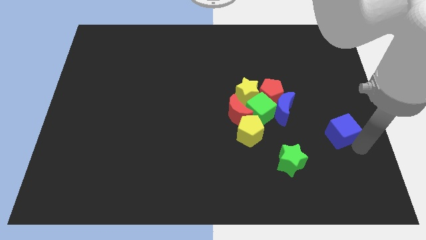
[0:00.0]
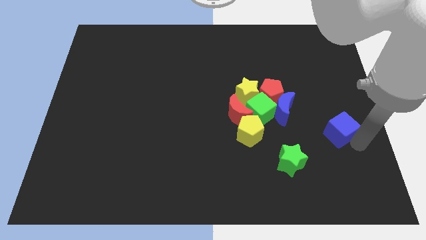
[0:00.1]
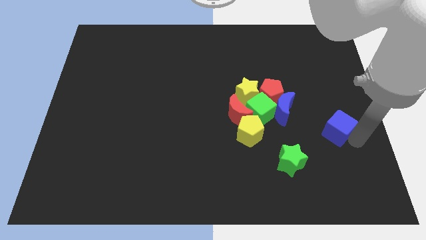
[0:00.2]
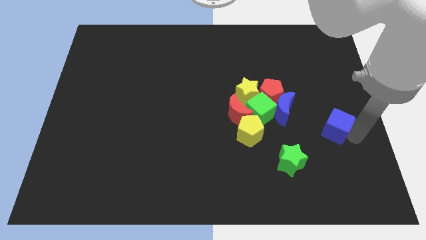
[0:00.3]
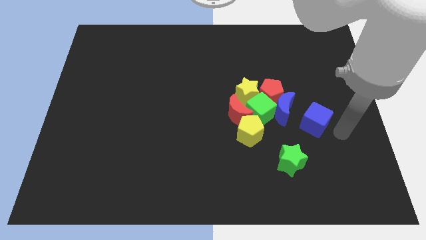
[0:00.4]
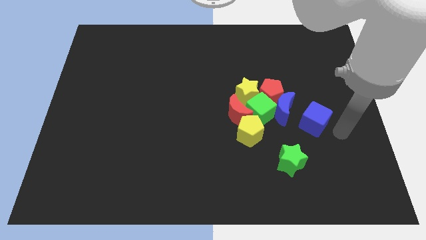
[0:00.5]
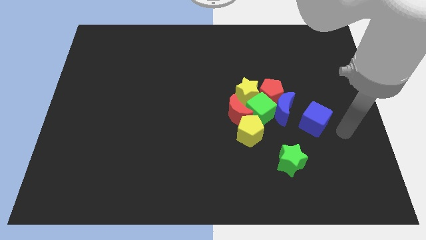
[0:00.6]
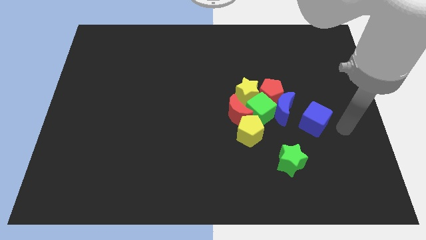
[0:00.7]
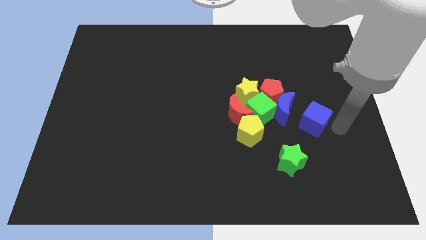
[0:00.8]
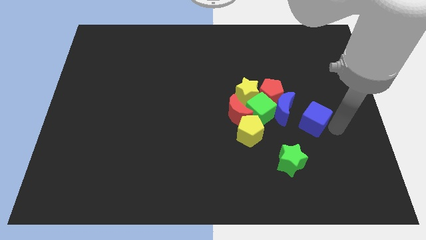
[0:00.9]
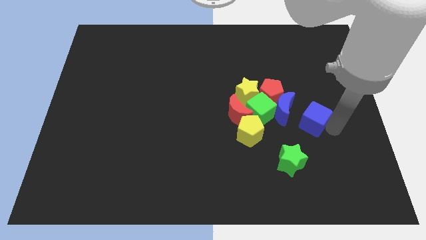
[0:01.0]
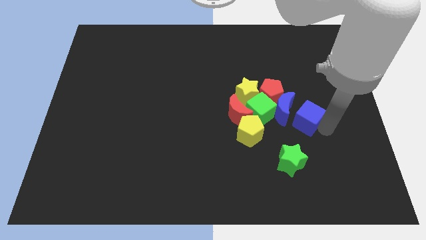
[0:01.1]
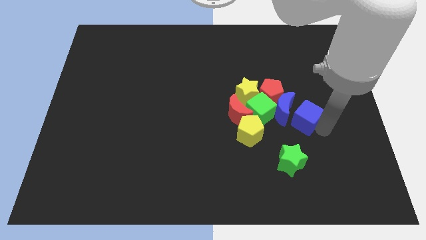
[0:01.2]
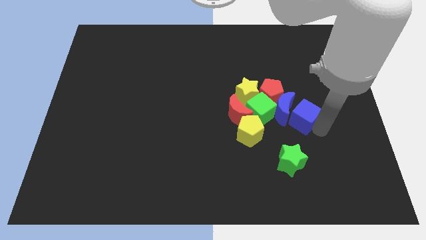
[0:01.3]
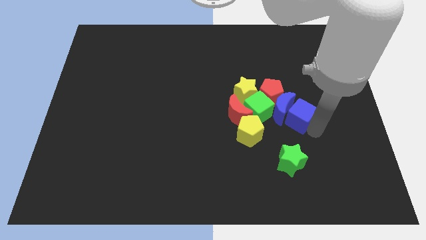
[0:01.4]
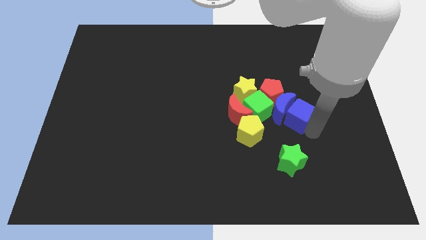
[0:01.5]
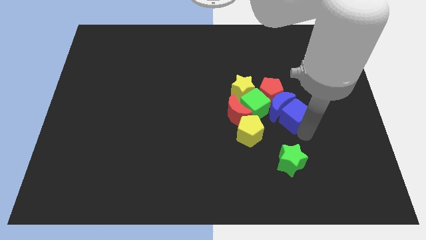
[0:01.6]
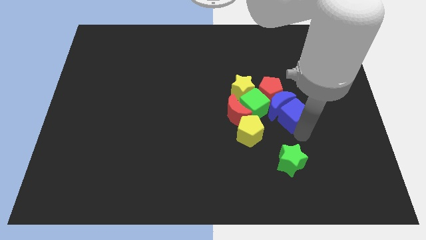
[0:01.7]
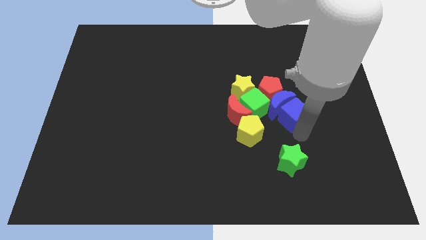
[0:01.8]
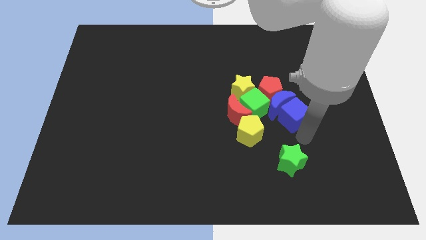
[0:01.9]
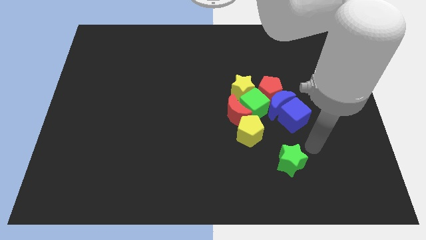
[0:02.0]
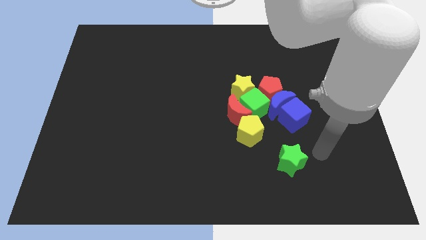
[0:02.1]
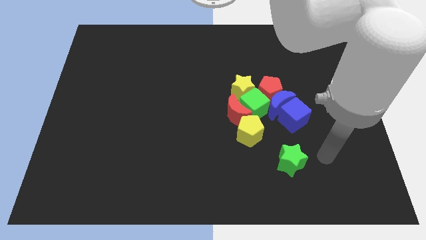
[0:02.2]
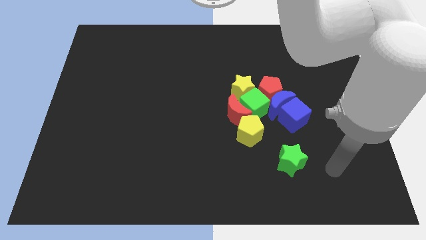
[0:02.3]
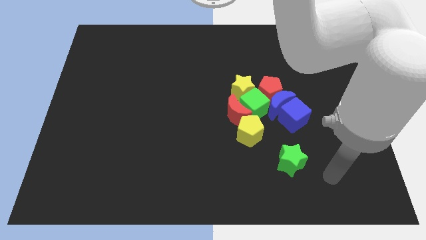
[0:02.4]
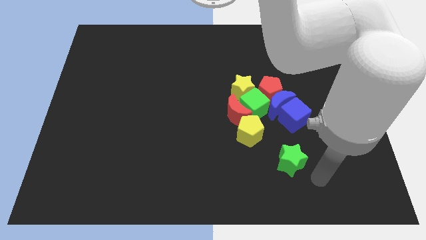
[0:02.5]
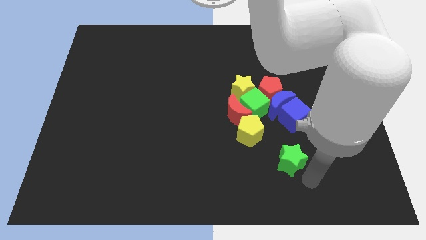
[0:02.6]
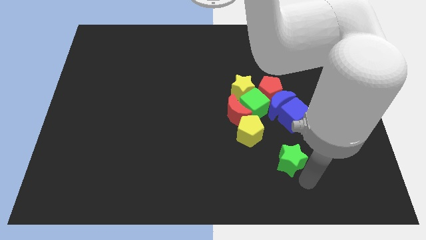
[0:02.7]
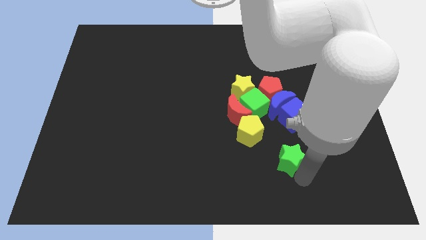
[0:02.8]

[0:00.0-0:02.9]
move the blue cube towards blue crescent

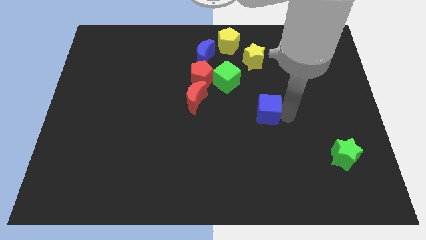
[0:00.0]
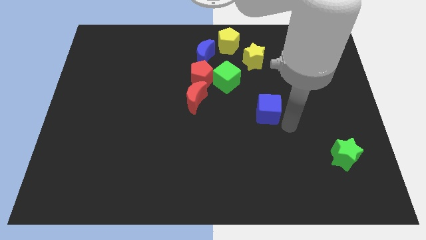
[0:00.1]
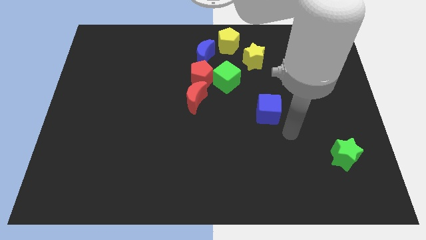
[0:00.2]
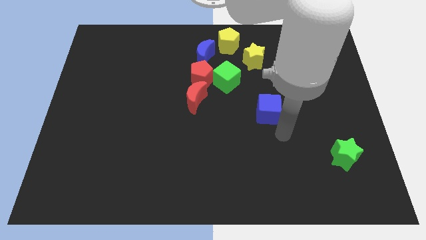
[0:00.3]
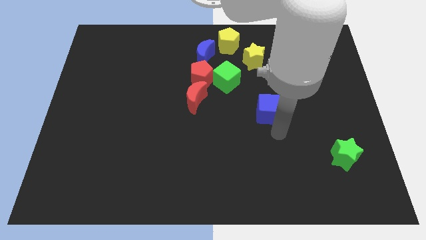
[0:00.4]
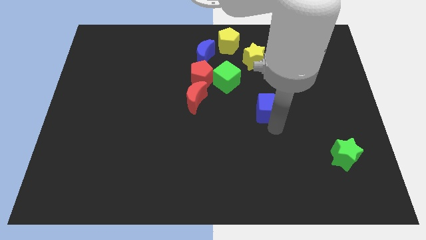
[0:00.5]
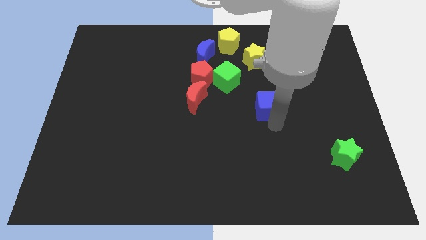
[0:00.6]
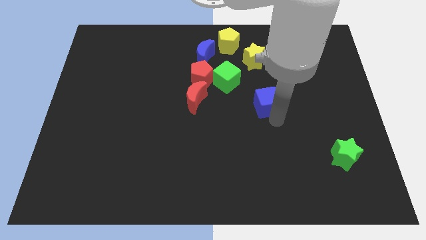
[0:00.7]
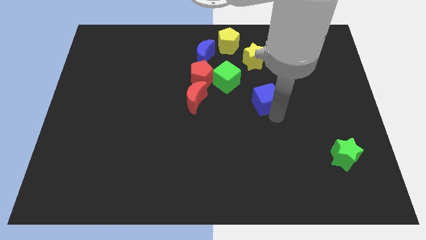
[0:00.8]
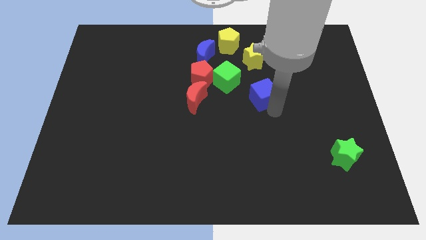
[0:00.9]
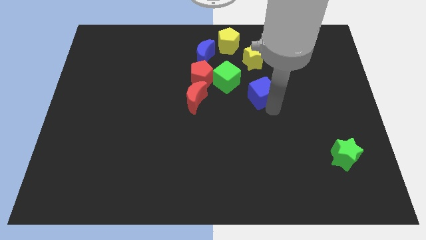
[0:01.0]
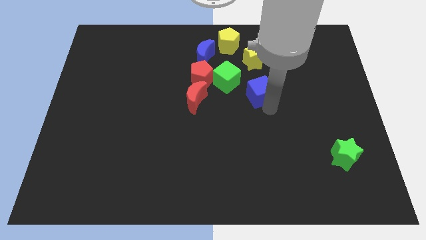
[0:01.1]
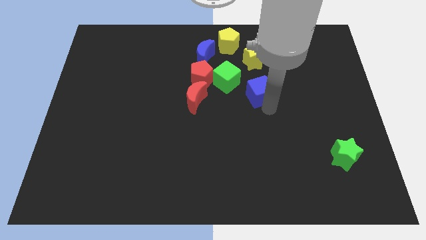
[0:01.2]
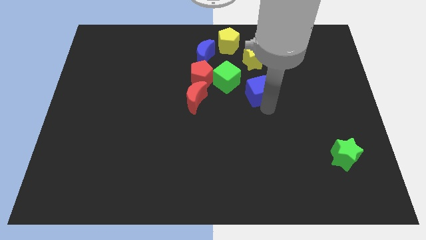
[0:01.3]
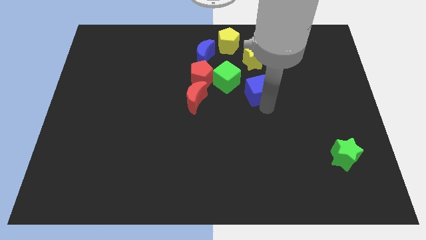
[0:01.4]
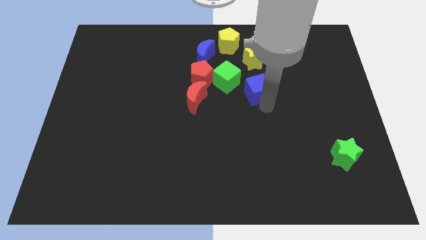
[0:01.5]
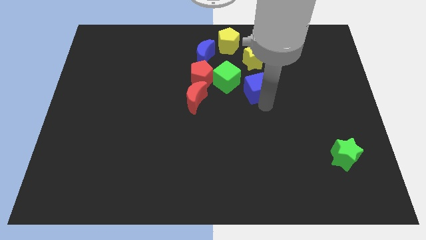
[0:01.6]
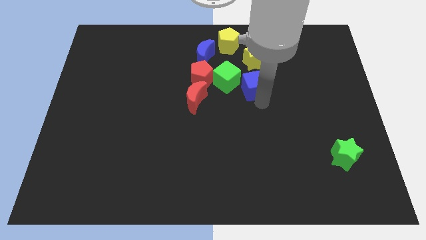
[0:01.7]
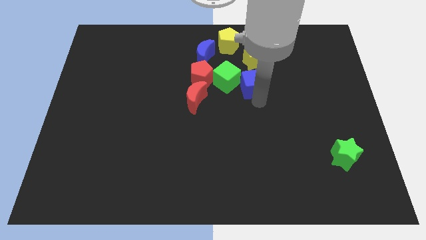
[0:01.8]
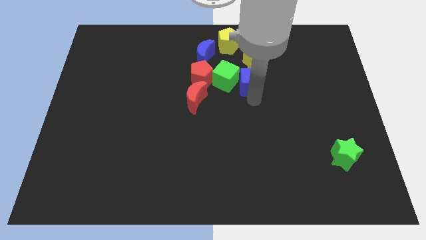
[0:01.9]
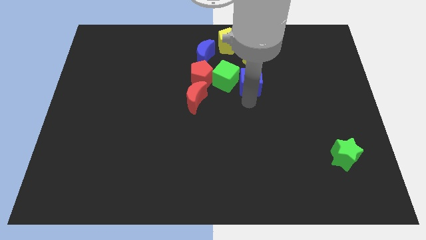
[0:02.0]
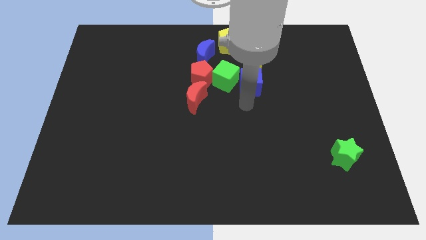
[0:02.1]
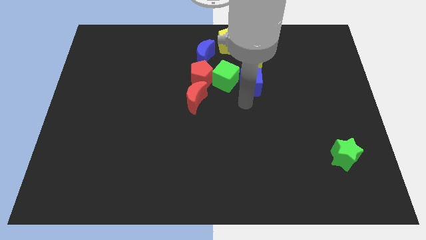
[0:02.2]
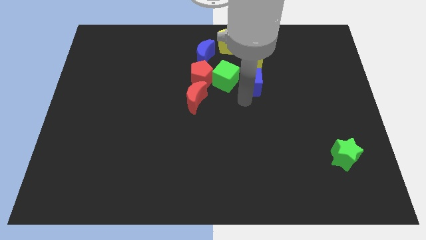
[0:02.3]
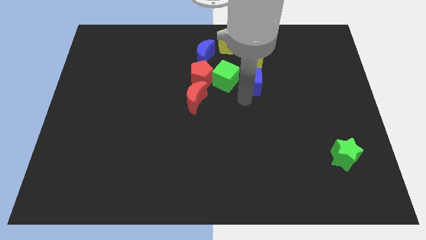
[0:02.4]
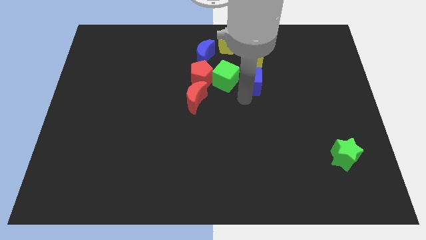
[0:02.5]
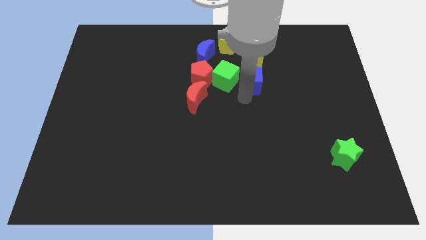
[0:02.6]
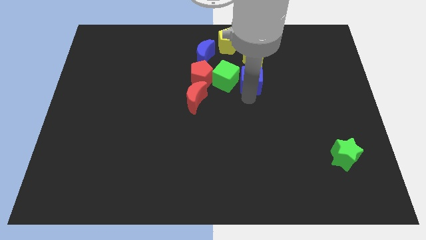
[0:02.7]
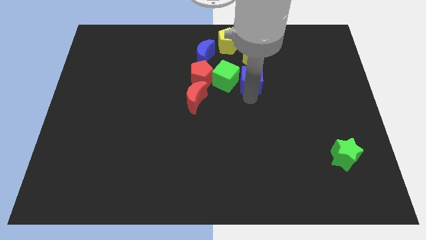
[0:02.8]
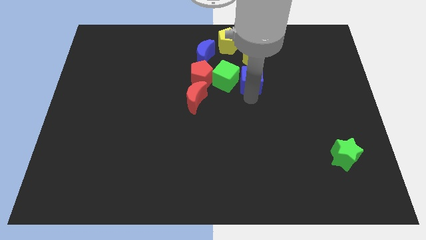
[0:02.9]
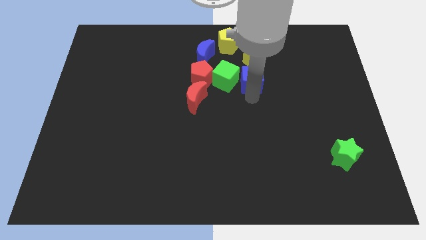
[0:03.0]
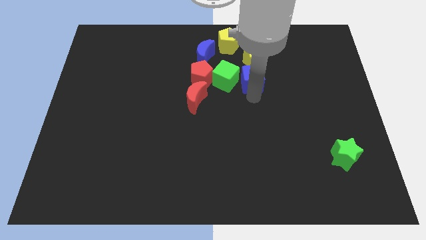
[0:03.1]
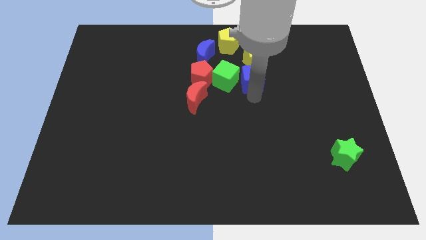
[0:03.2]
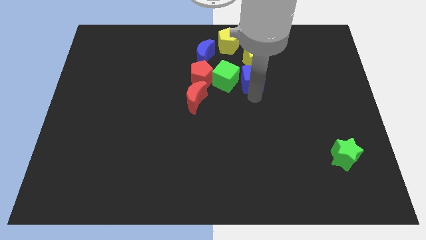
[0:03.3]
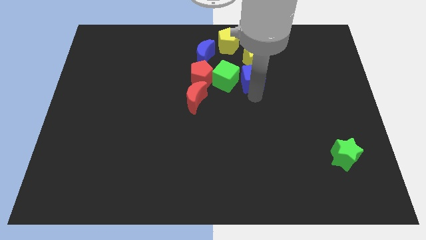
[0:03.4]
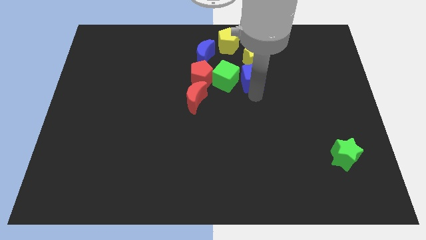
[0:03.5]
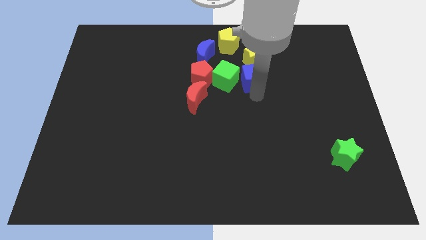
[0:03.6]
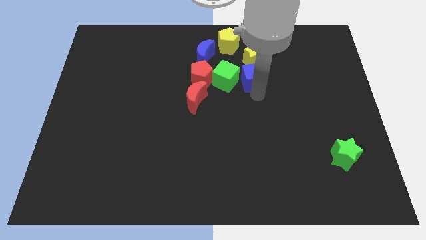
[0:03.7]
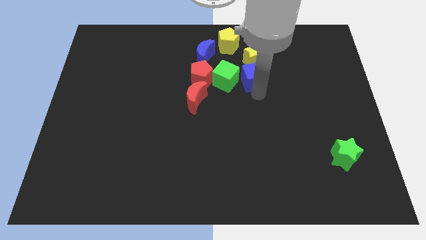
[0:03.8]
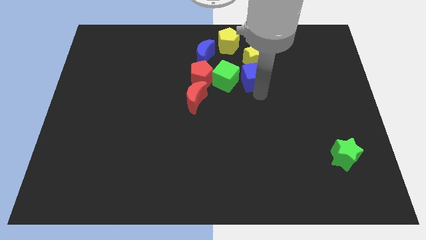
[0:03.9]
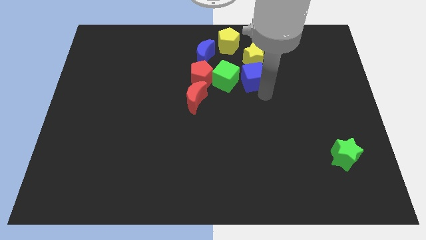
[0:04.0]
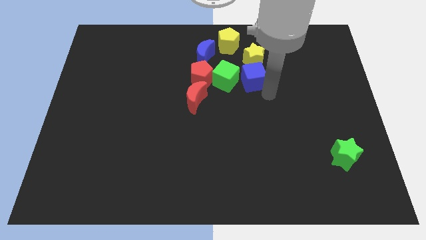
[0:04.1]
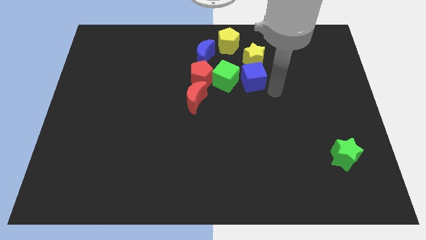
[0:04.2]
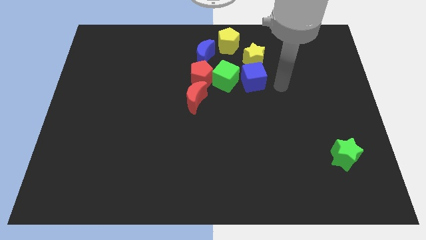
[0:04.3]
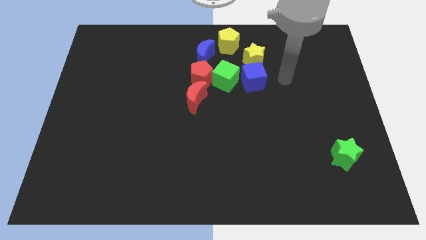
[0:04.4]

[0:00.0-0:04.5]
place the blue square down to the yellow star

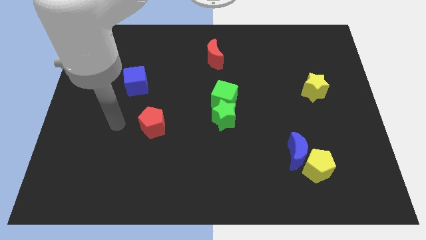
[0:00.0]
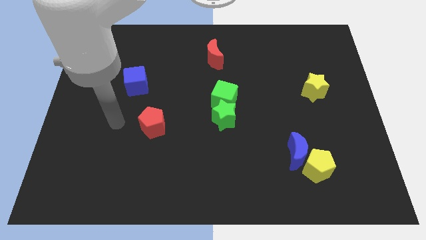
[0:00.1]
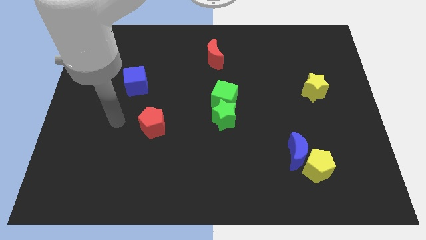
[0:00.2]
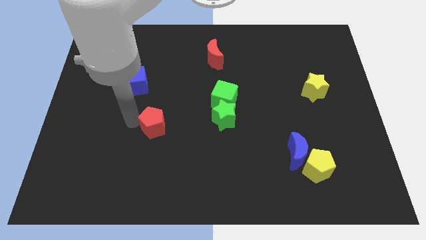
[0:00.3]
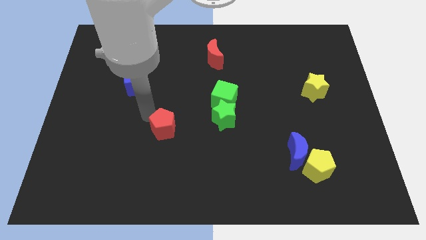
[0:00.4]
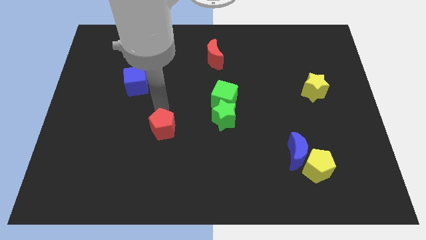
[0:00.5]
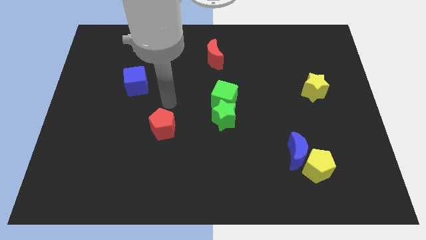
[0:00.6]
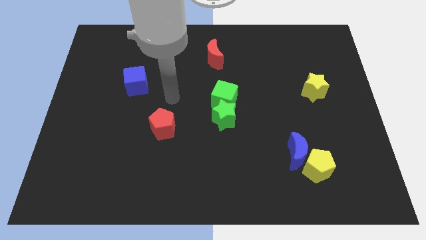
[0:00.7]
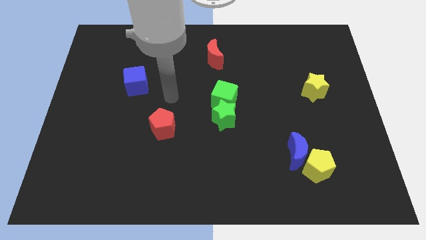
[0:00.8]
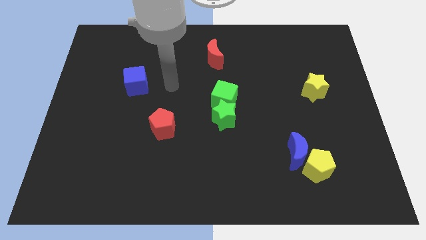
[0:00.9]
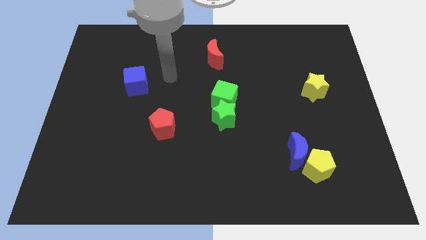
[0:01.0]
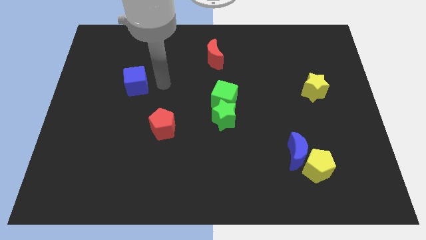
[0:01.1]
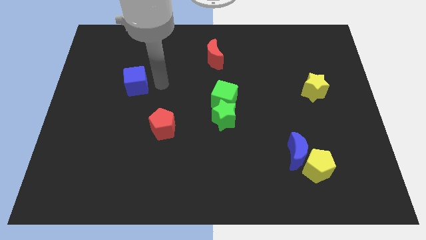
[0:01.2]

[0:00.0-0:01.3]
slide the red pentagon slightly to the right

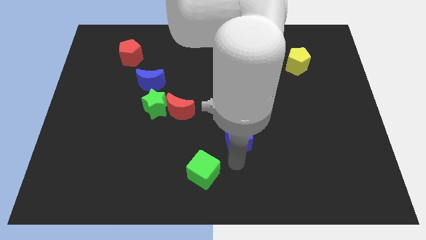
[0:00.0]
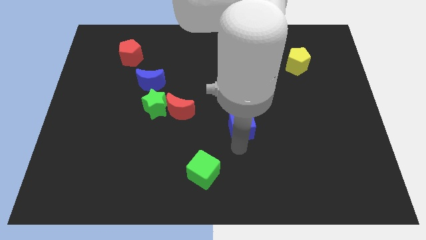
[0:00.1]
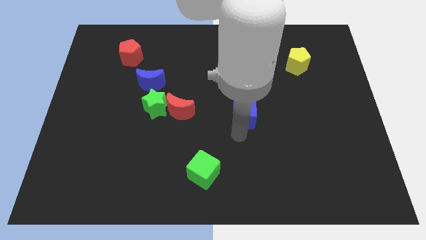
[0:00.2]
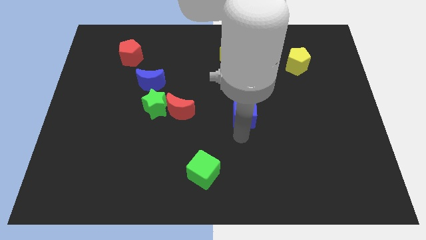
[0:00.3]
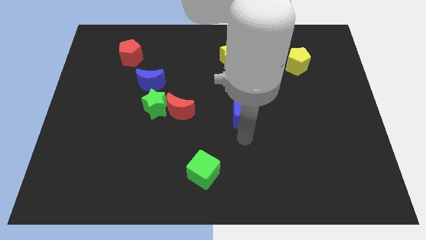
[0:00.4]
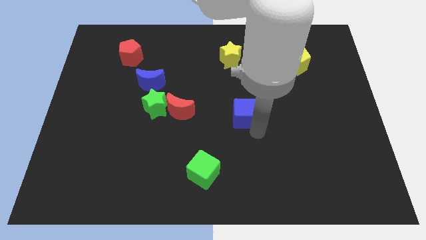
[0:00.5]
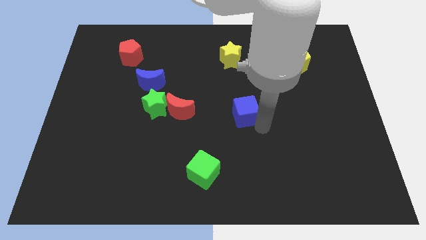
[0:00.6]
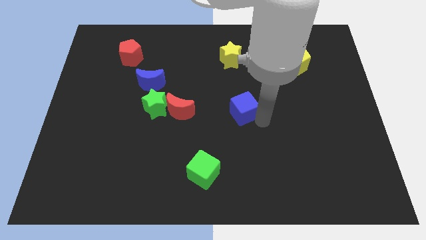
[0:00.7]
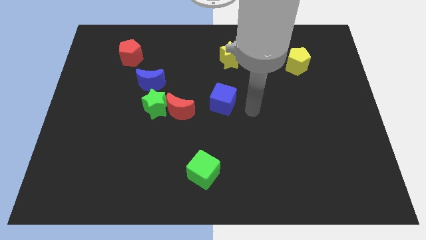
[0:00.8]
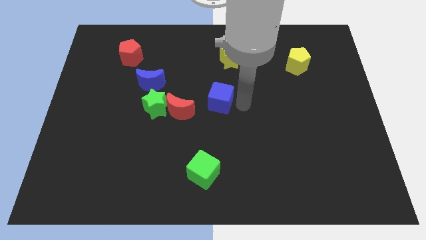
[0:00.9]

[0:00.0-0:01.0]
push the blue cube to the center of the board
